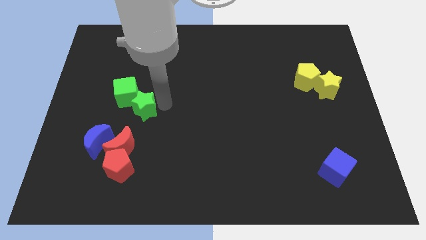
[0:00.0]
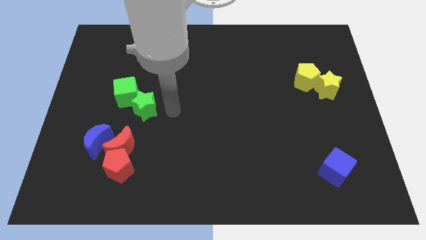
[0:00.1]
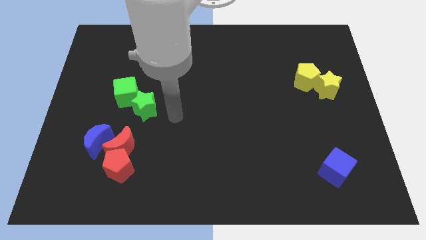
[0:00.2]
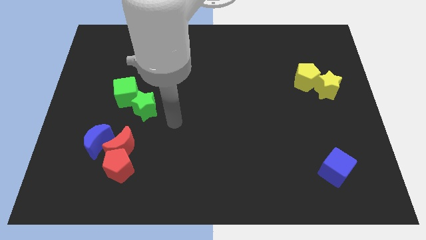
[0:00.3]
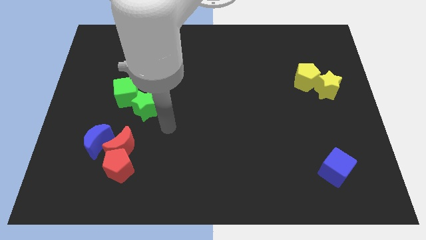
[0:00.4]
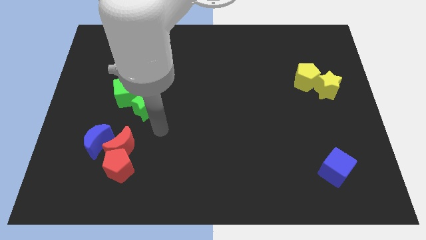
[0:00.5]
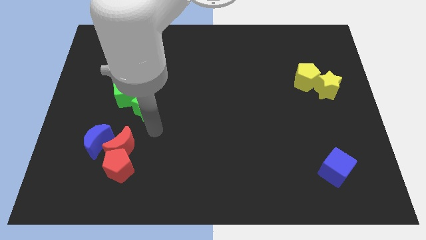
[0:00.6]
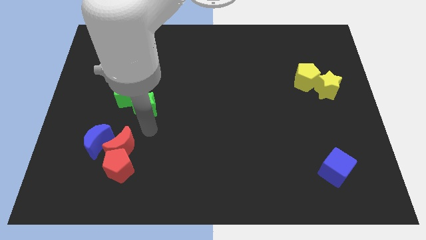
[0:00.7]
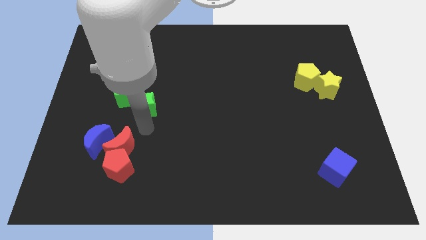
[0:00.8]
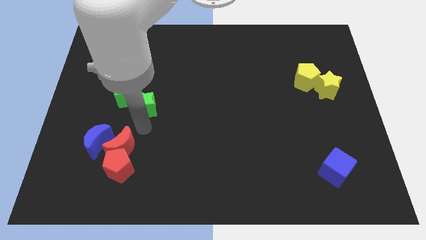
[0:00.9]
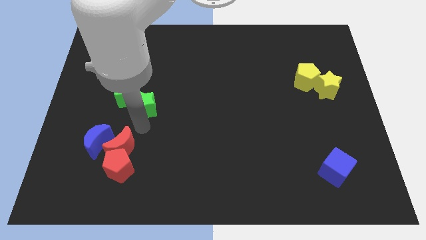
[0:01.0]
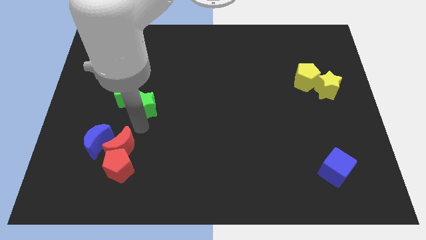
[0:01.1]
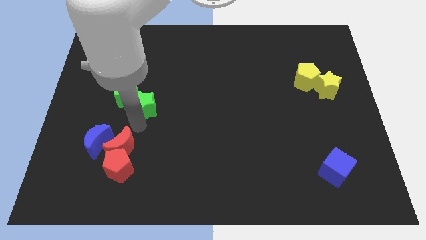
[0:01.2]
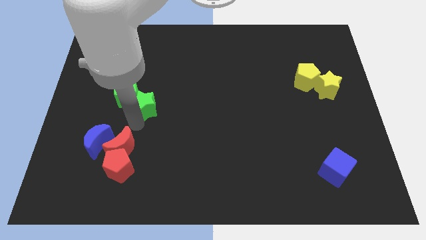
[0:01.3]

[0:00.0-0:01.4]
place your arm between the green star and red crescent

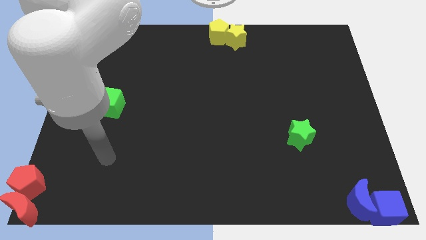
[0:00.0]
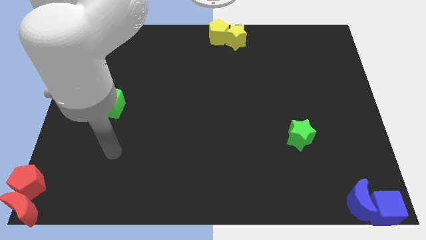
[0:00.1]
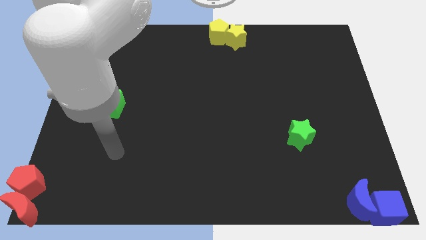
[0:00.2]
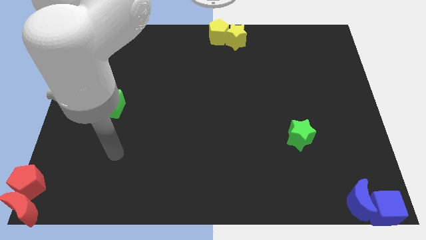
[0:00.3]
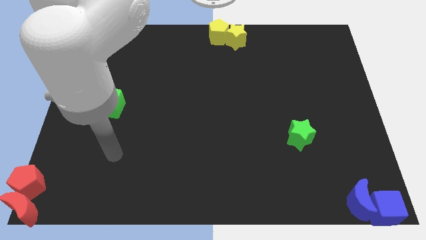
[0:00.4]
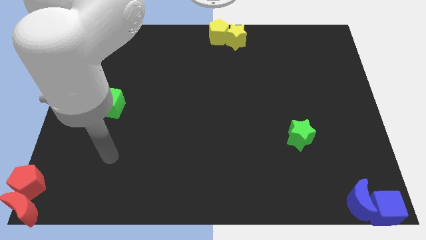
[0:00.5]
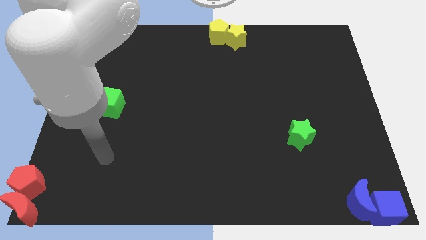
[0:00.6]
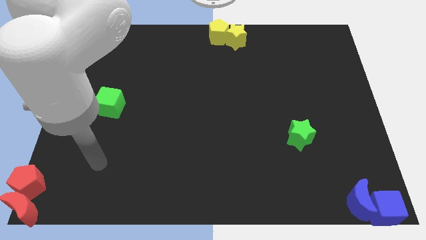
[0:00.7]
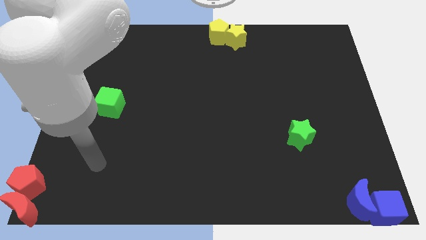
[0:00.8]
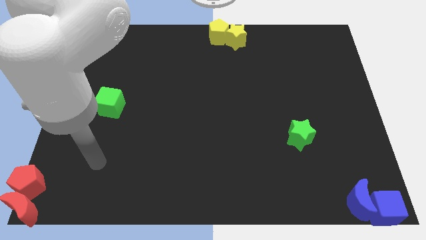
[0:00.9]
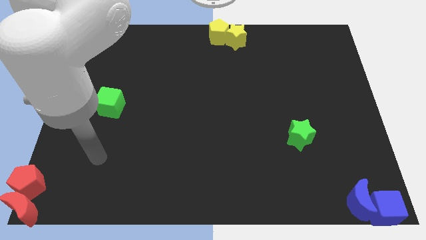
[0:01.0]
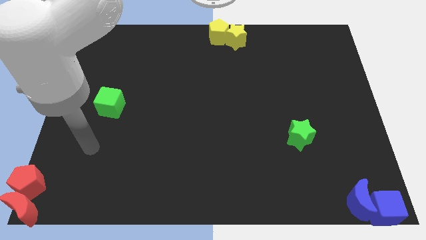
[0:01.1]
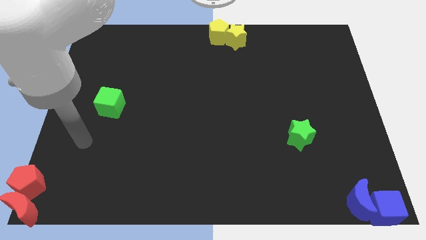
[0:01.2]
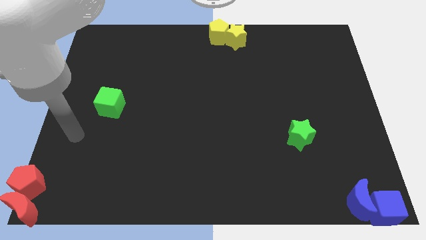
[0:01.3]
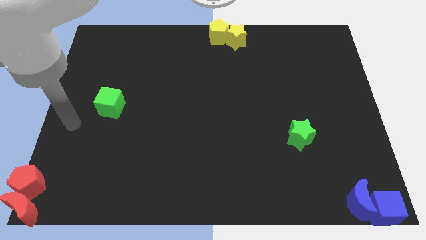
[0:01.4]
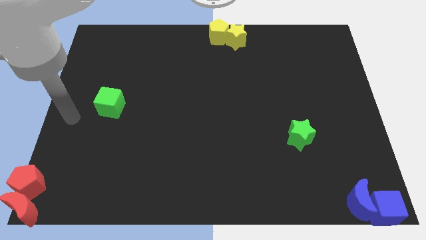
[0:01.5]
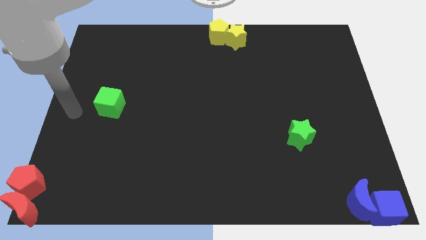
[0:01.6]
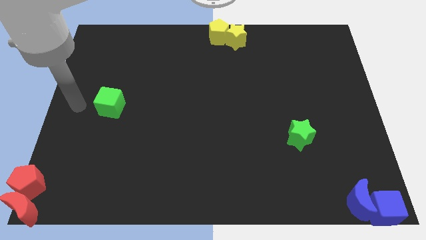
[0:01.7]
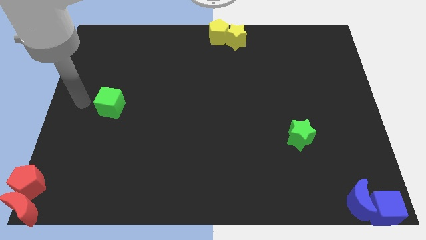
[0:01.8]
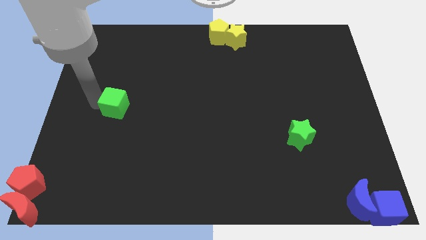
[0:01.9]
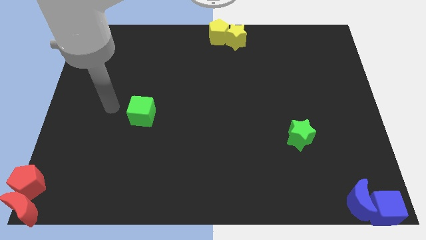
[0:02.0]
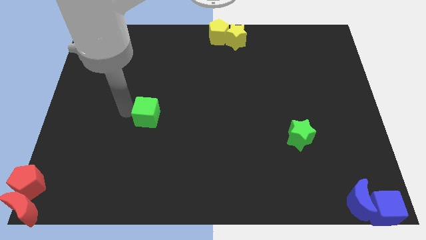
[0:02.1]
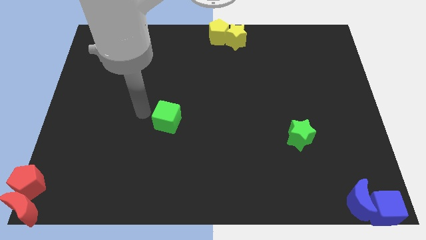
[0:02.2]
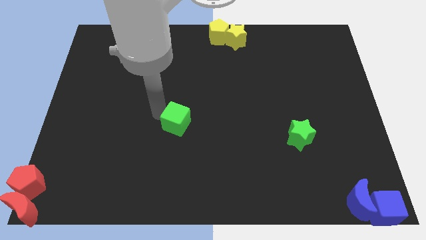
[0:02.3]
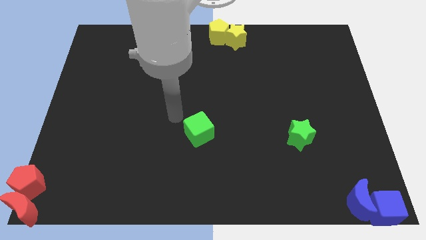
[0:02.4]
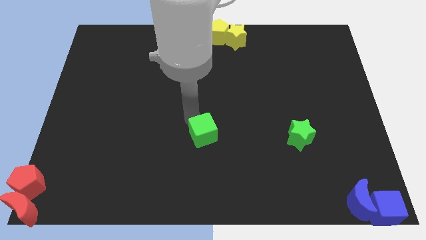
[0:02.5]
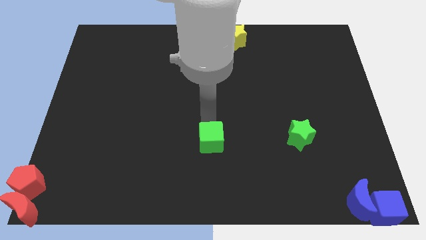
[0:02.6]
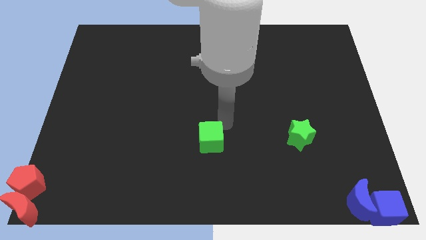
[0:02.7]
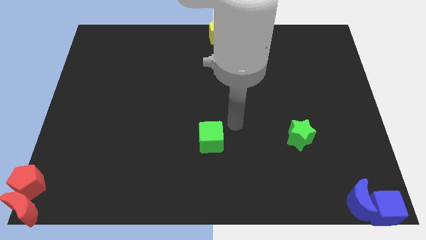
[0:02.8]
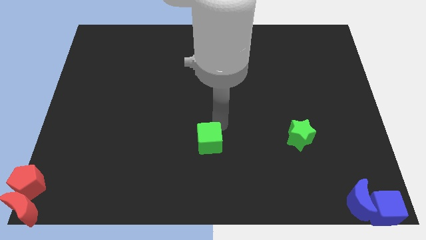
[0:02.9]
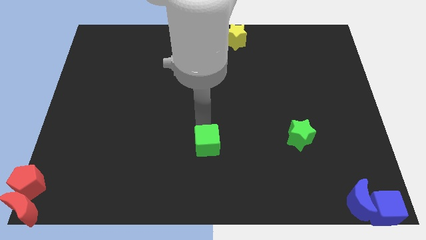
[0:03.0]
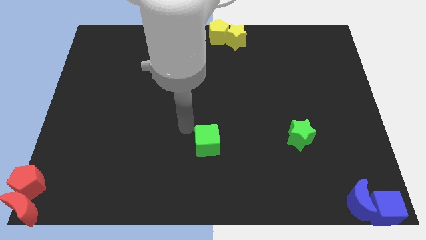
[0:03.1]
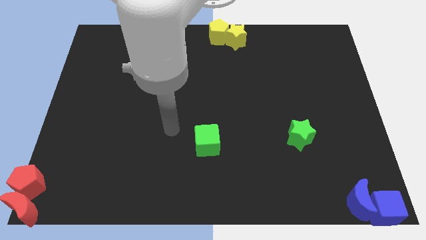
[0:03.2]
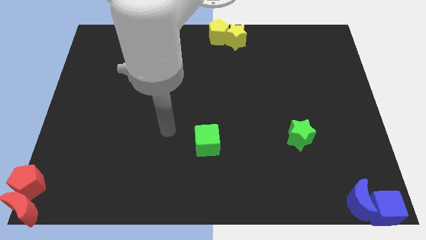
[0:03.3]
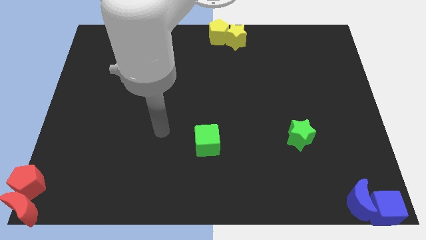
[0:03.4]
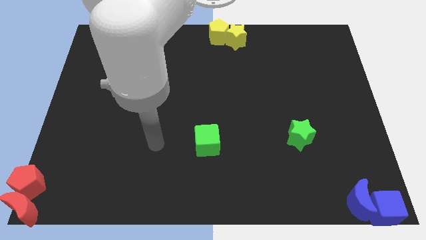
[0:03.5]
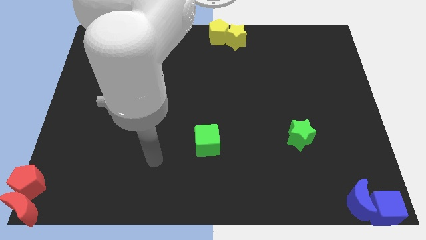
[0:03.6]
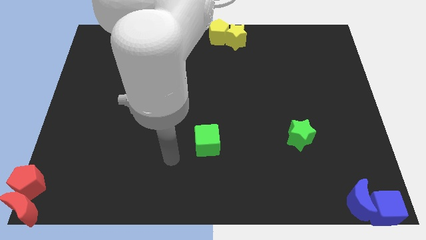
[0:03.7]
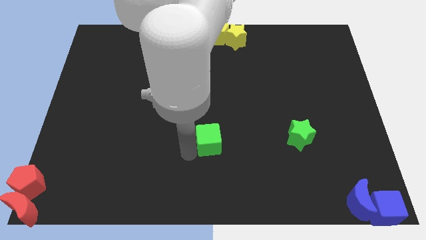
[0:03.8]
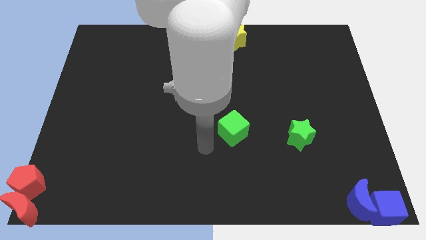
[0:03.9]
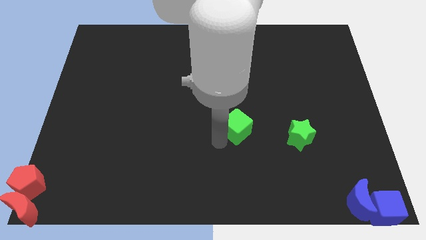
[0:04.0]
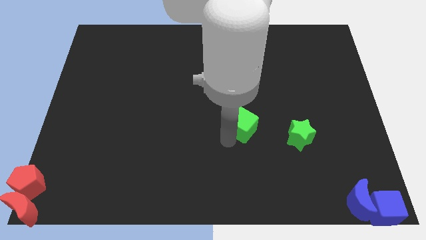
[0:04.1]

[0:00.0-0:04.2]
push the green cube towards the green star

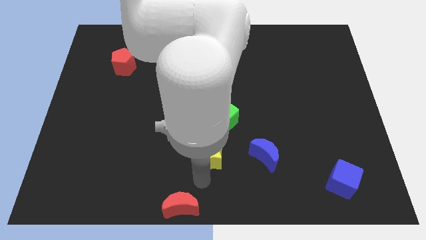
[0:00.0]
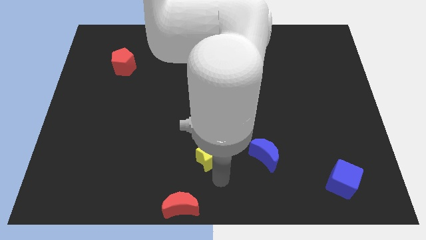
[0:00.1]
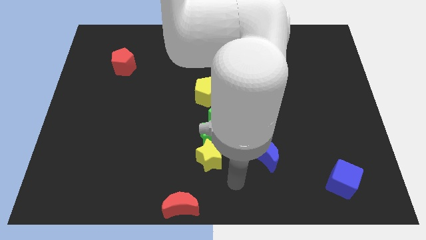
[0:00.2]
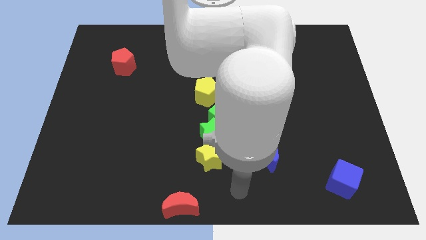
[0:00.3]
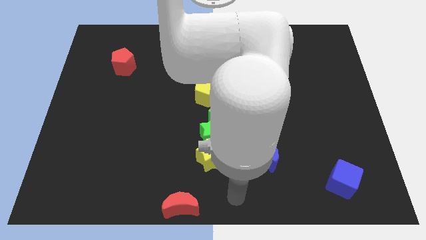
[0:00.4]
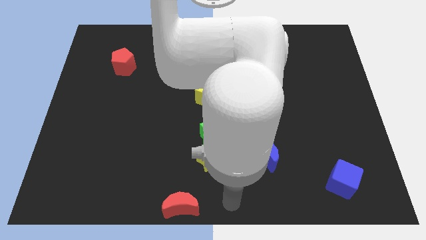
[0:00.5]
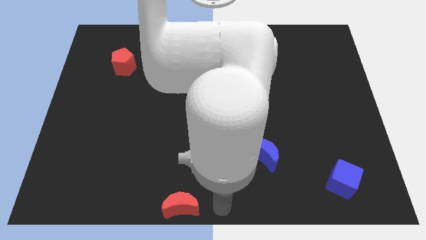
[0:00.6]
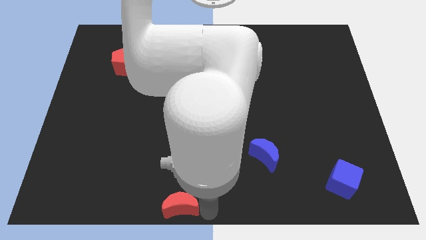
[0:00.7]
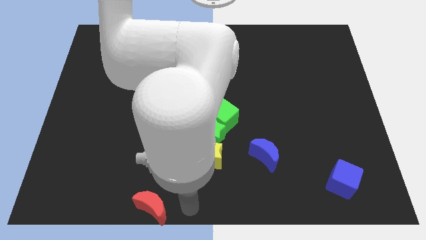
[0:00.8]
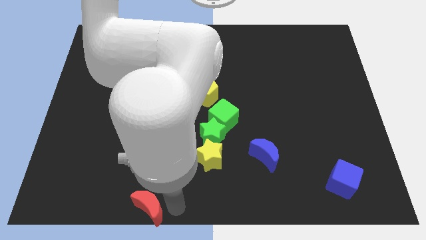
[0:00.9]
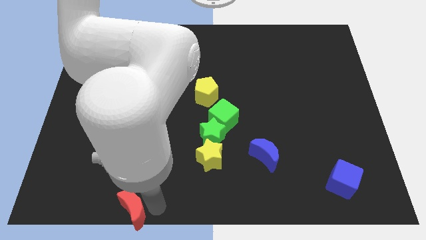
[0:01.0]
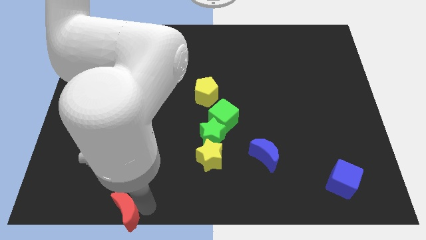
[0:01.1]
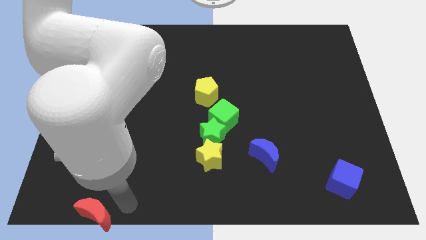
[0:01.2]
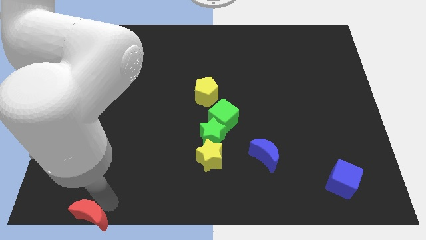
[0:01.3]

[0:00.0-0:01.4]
move the red crescent to the left side

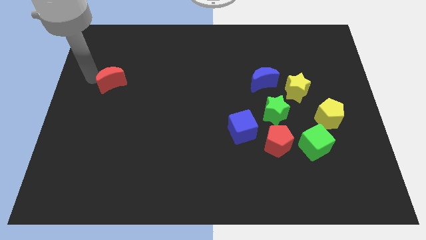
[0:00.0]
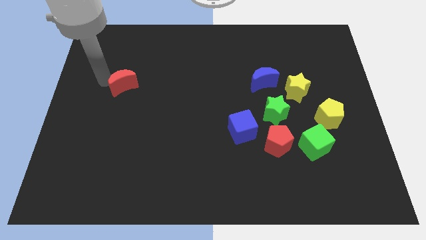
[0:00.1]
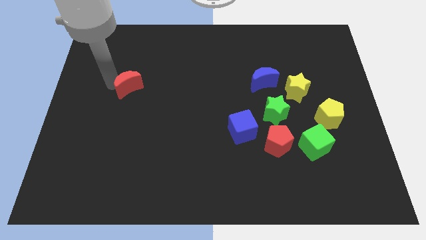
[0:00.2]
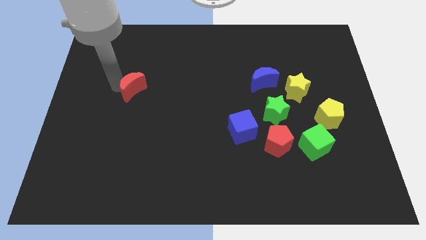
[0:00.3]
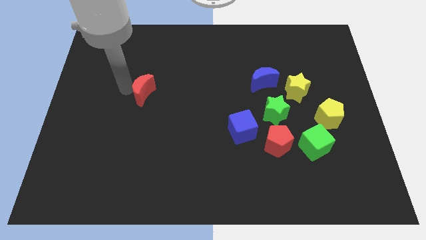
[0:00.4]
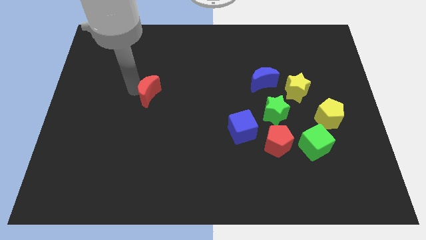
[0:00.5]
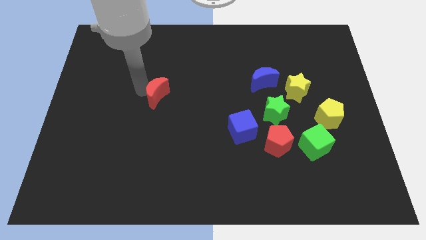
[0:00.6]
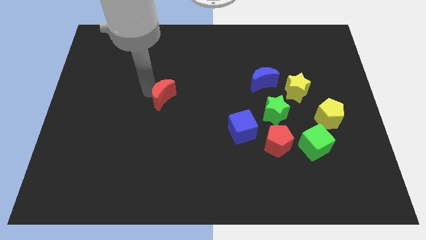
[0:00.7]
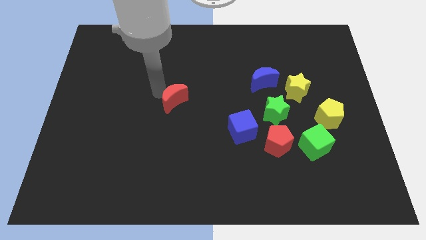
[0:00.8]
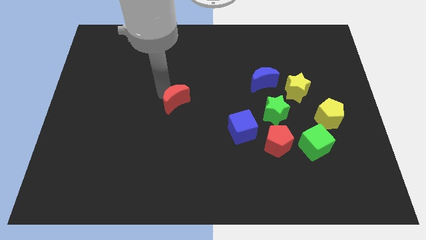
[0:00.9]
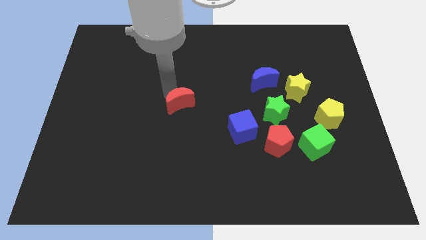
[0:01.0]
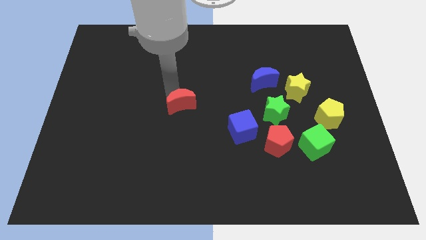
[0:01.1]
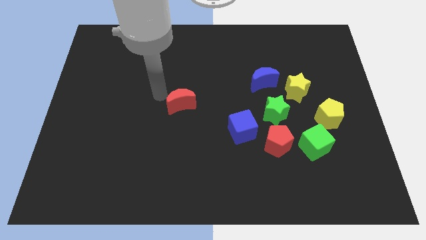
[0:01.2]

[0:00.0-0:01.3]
push red crescent slightly towards right down

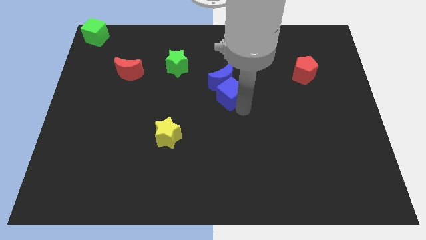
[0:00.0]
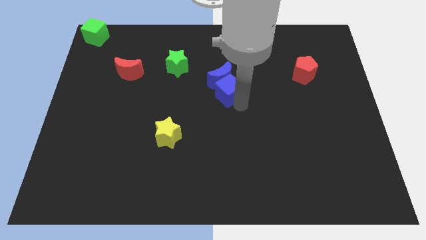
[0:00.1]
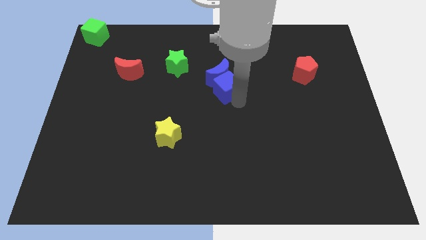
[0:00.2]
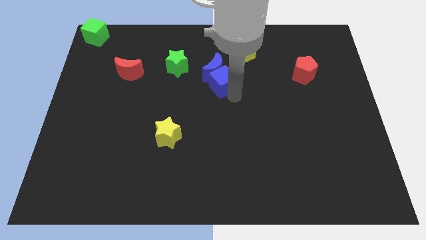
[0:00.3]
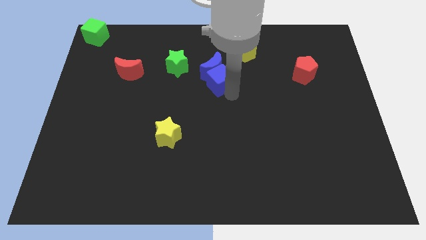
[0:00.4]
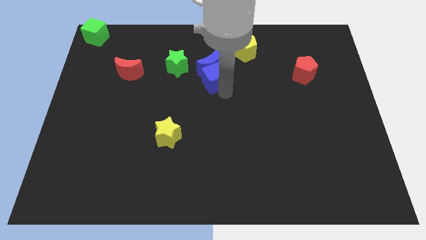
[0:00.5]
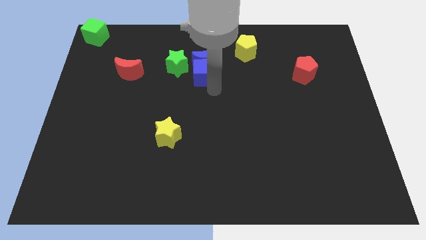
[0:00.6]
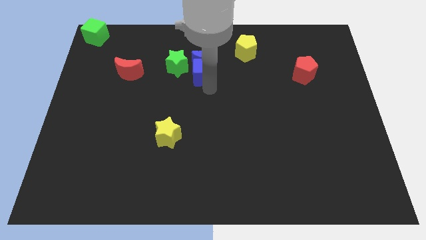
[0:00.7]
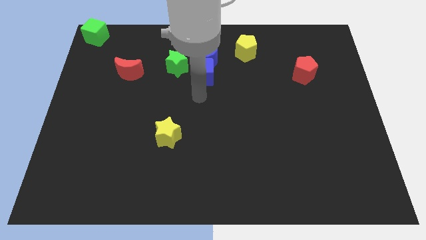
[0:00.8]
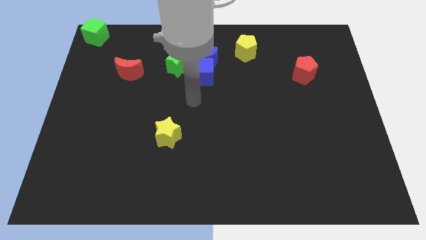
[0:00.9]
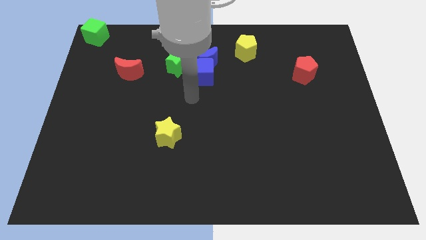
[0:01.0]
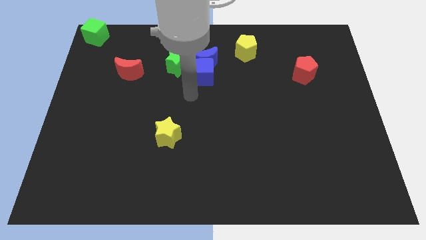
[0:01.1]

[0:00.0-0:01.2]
push blocks together to the right of green star
